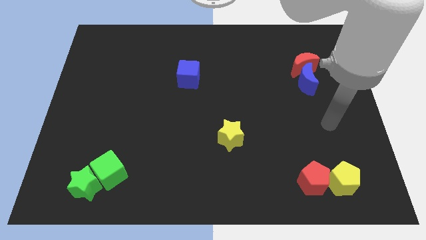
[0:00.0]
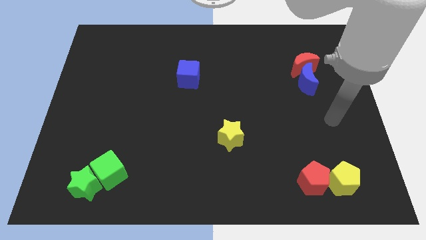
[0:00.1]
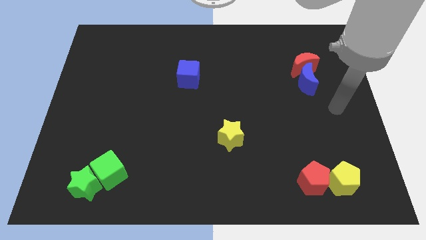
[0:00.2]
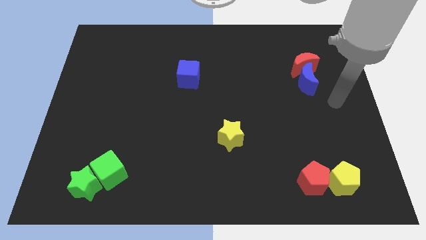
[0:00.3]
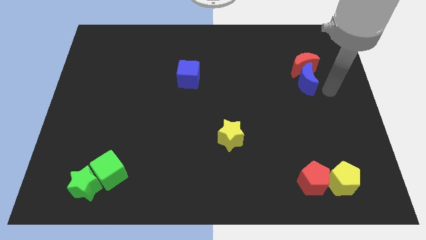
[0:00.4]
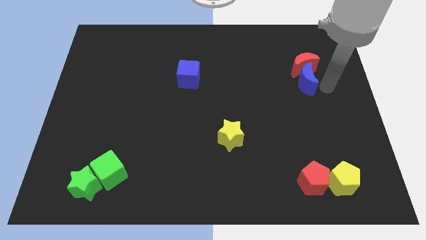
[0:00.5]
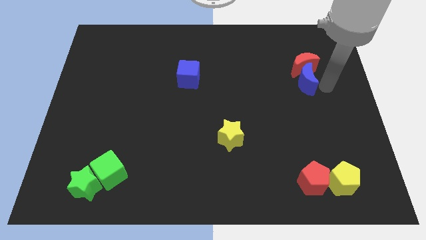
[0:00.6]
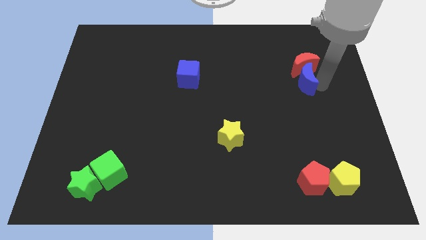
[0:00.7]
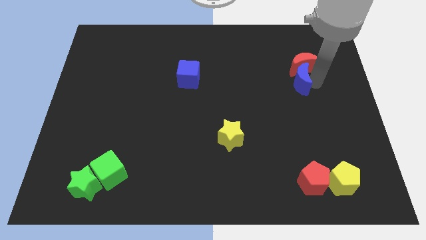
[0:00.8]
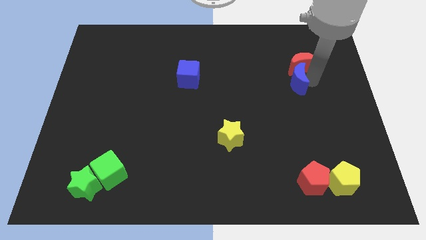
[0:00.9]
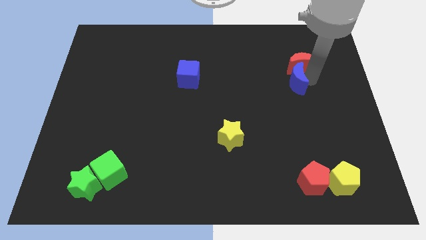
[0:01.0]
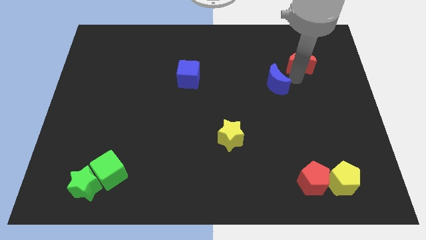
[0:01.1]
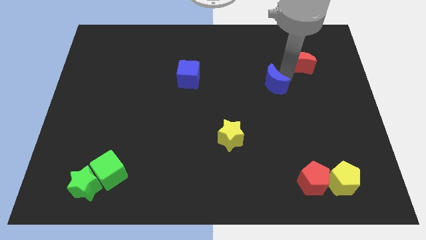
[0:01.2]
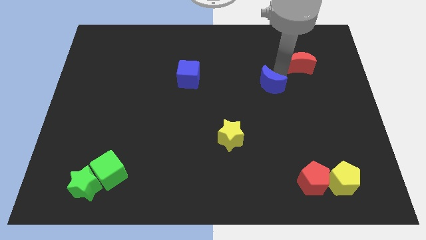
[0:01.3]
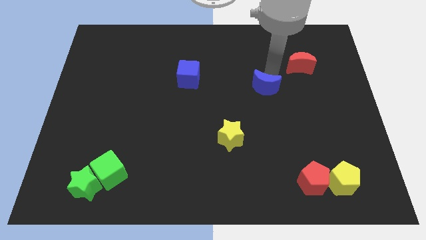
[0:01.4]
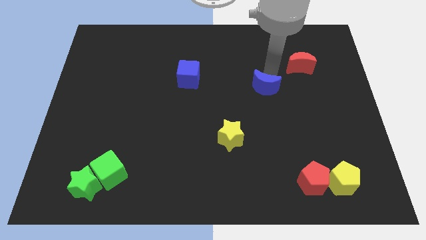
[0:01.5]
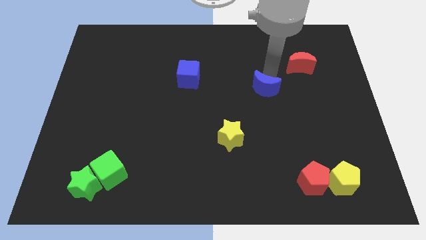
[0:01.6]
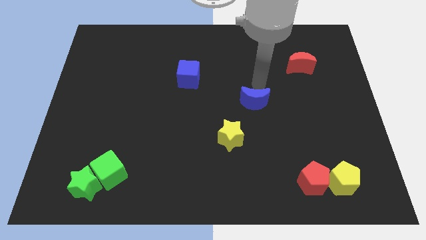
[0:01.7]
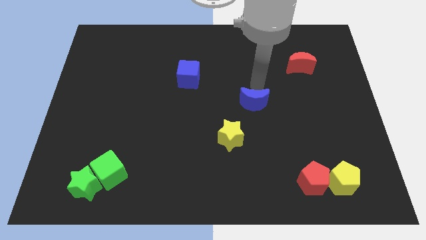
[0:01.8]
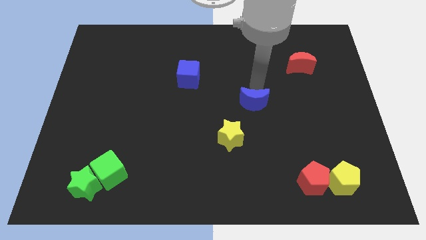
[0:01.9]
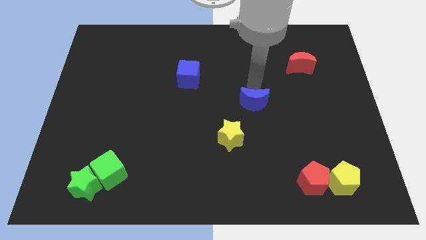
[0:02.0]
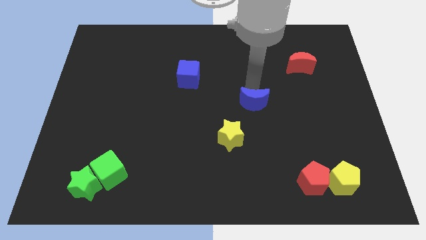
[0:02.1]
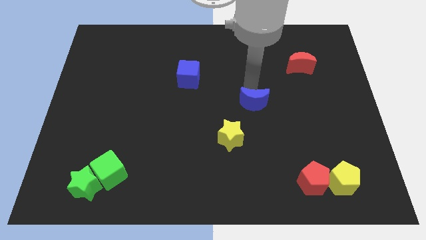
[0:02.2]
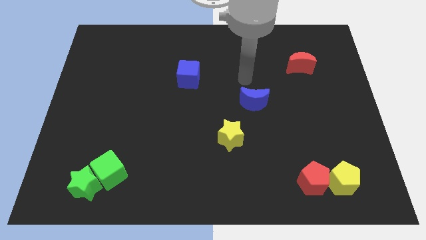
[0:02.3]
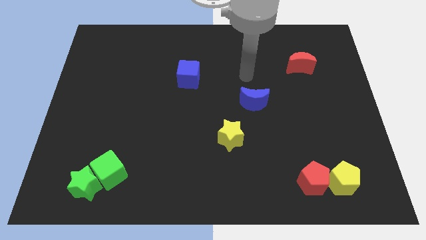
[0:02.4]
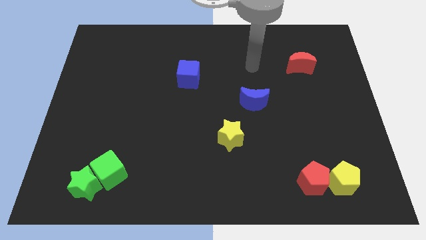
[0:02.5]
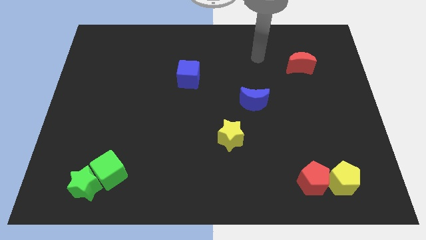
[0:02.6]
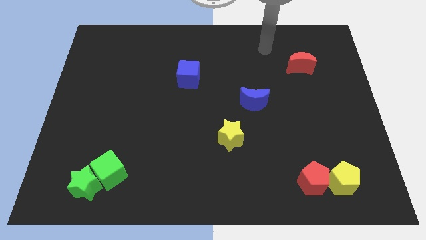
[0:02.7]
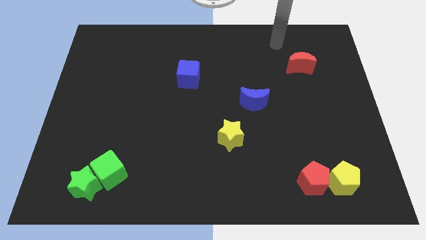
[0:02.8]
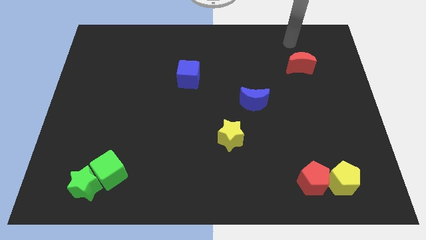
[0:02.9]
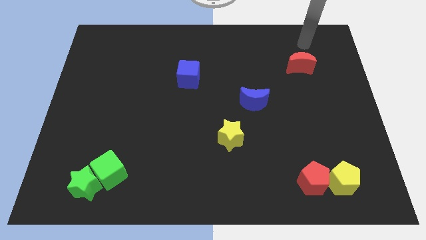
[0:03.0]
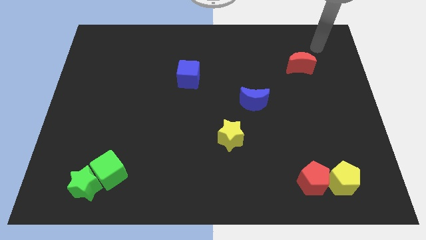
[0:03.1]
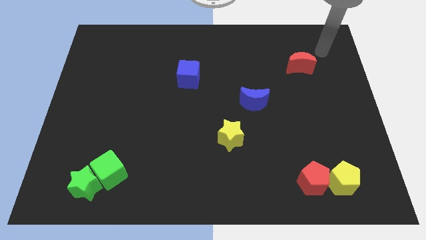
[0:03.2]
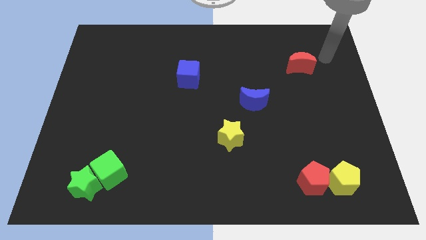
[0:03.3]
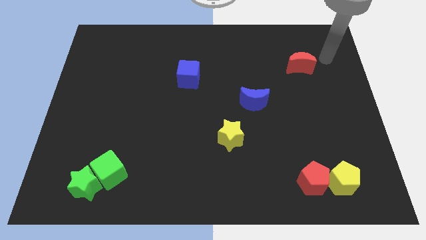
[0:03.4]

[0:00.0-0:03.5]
move the blue crescent towards the yellow star

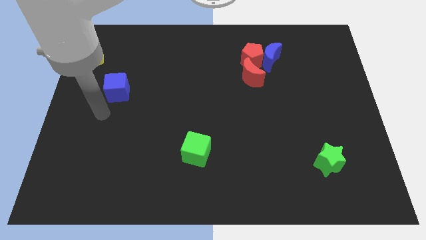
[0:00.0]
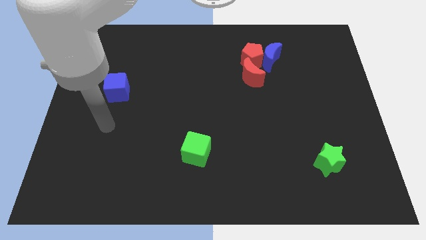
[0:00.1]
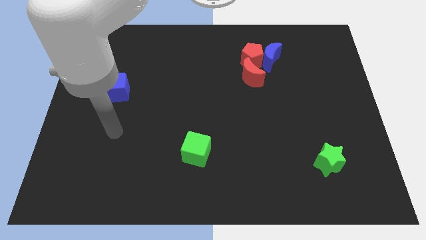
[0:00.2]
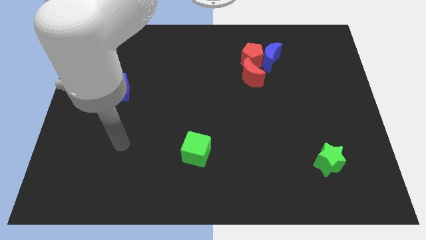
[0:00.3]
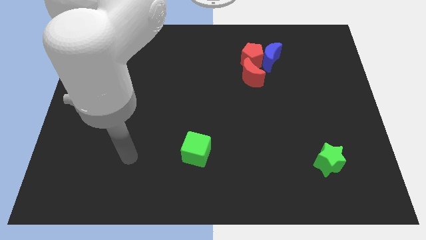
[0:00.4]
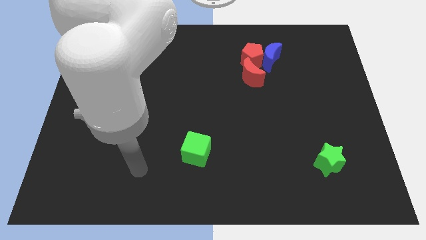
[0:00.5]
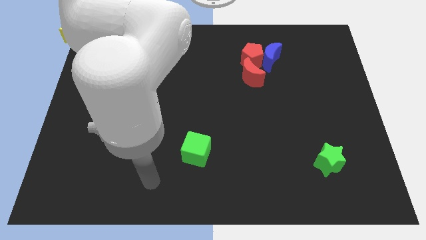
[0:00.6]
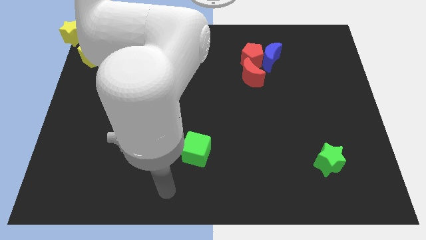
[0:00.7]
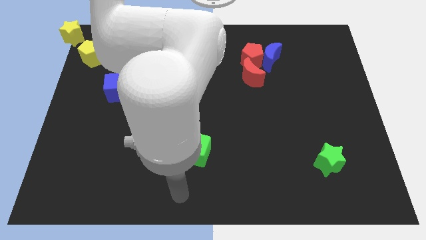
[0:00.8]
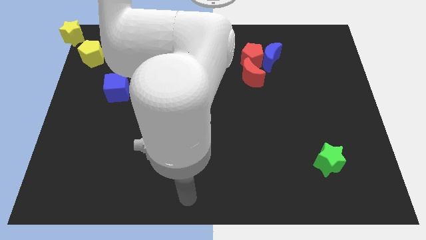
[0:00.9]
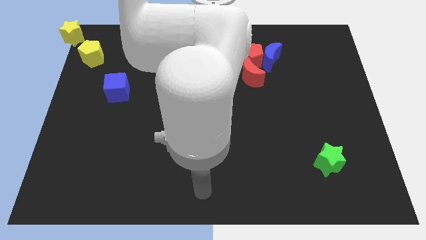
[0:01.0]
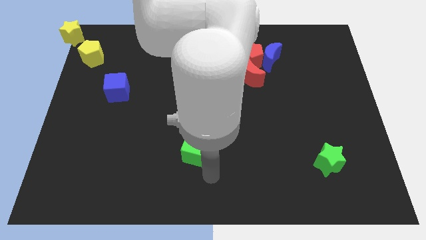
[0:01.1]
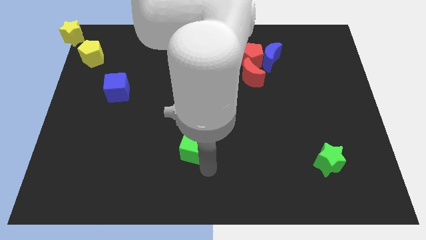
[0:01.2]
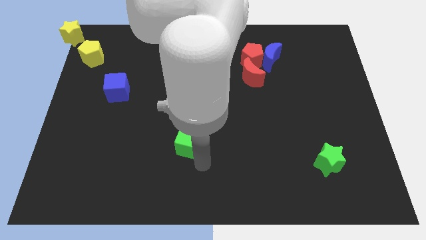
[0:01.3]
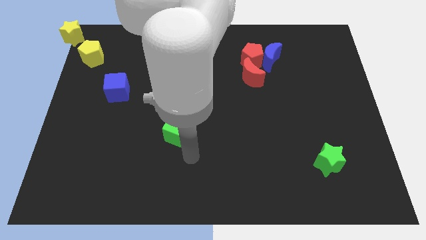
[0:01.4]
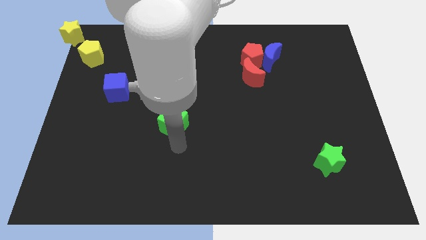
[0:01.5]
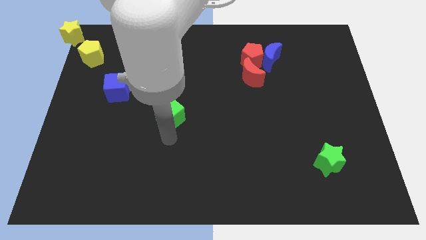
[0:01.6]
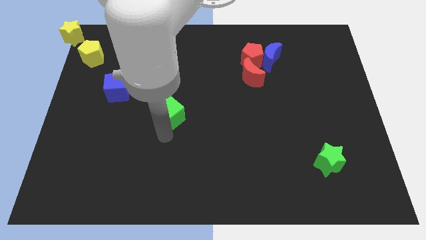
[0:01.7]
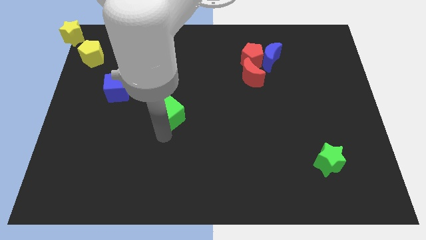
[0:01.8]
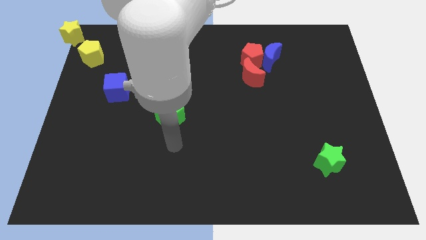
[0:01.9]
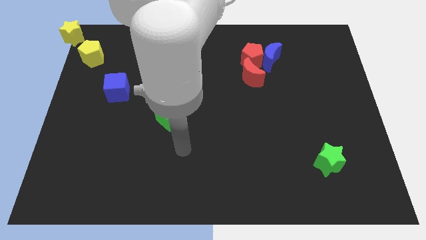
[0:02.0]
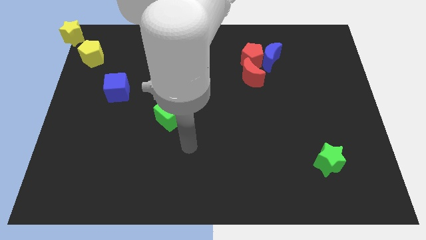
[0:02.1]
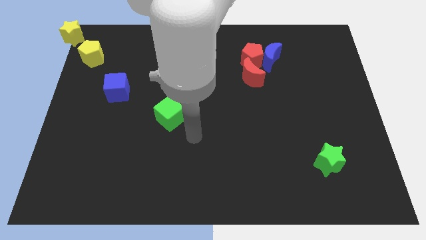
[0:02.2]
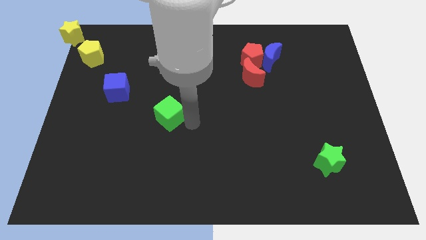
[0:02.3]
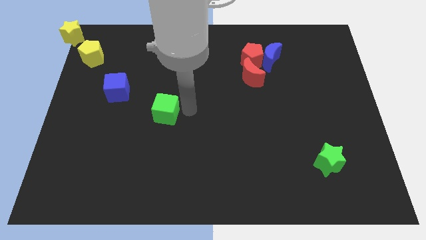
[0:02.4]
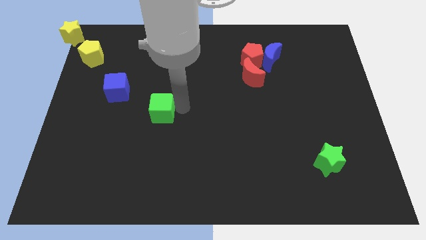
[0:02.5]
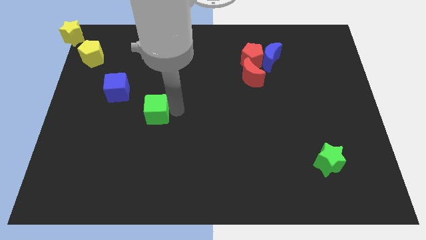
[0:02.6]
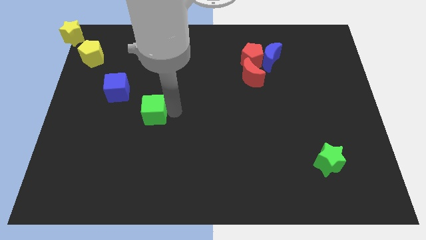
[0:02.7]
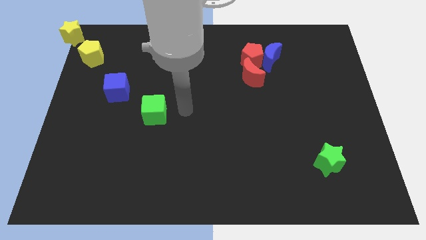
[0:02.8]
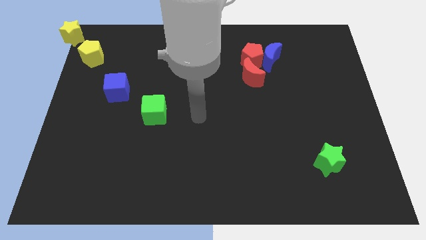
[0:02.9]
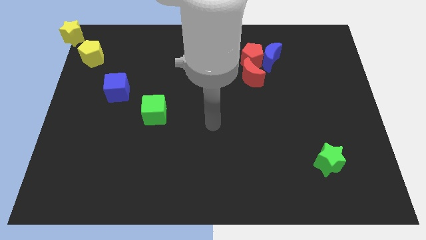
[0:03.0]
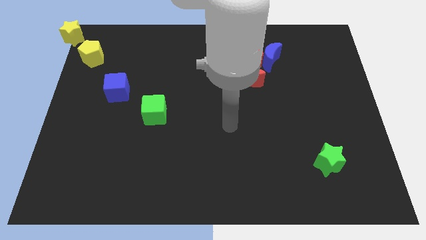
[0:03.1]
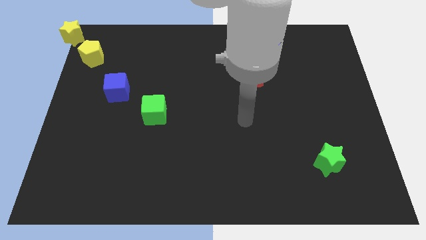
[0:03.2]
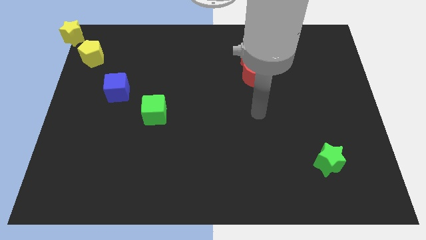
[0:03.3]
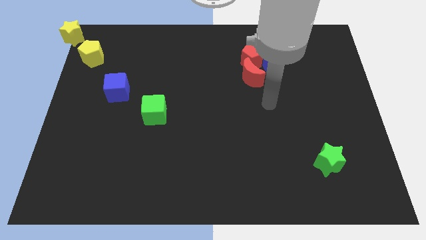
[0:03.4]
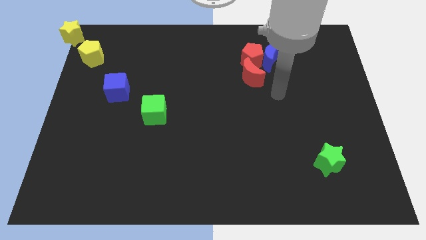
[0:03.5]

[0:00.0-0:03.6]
push the green cube slightly towards the blue cube

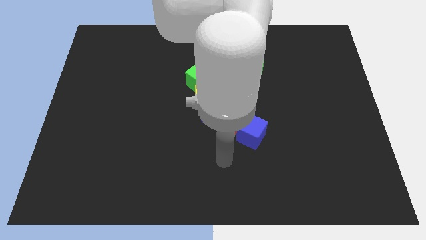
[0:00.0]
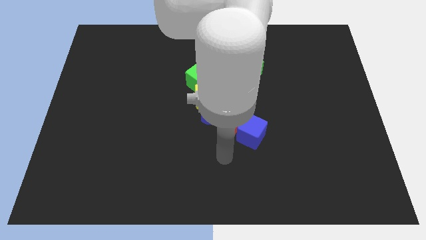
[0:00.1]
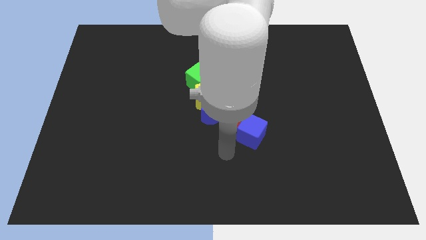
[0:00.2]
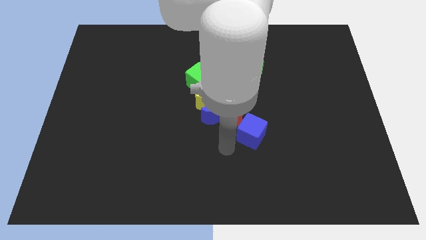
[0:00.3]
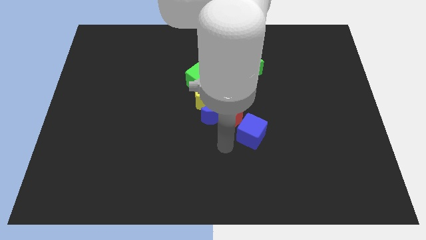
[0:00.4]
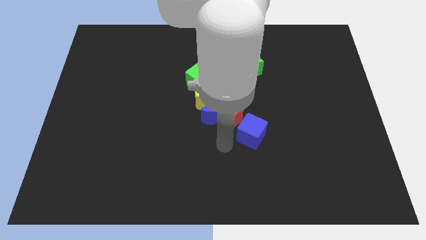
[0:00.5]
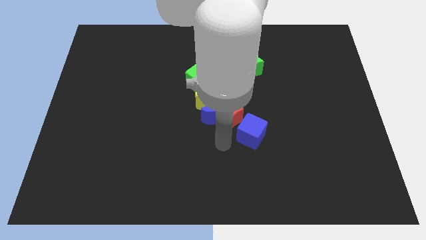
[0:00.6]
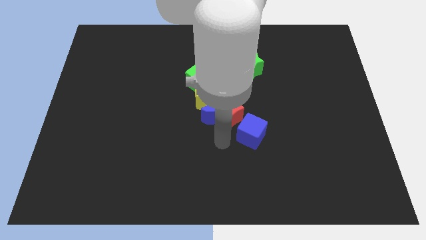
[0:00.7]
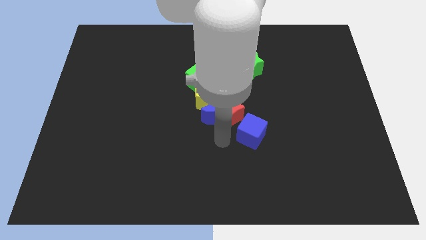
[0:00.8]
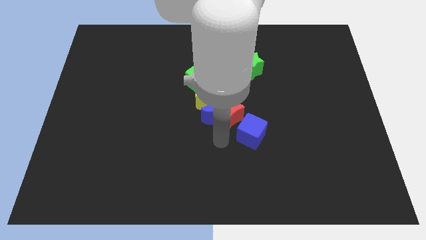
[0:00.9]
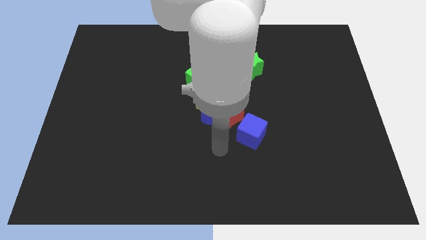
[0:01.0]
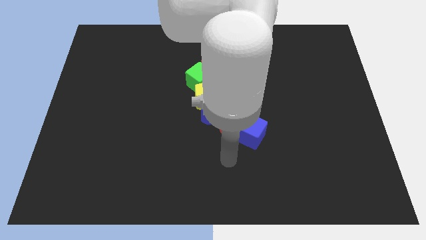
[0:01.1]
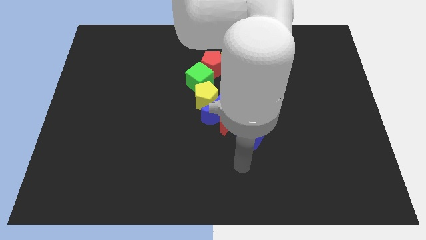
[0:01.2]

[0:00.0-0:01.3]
push the red crescent to the right side of the blue crescent

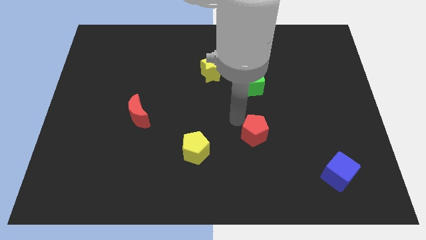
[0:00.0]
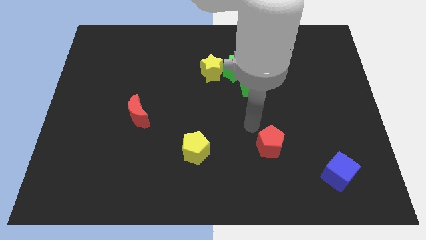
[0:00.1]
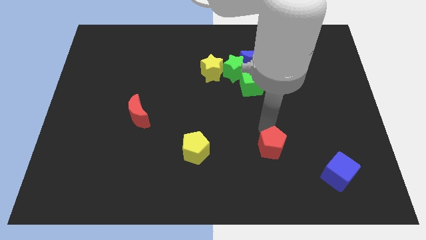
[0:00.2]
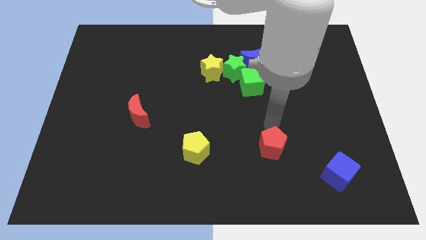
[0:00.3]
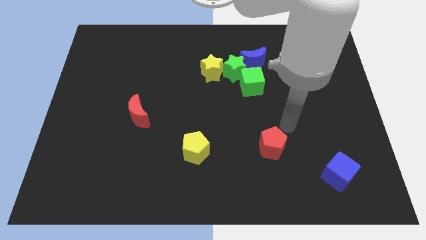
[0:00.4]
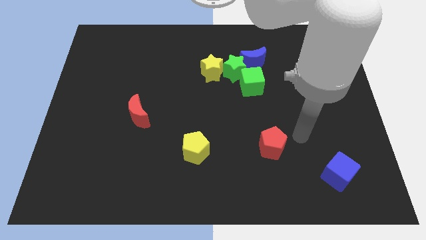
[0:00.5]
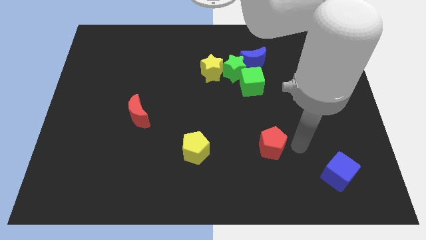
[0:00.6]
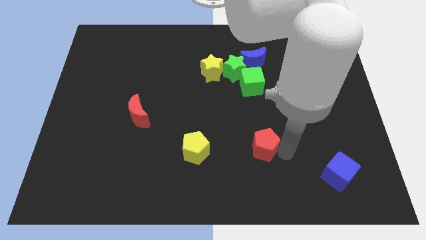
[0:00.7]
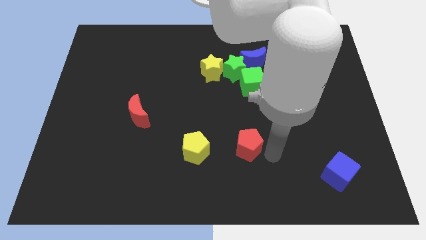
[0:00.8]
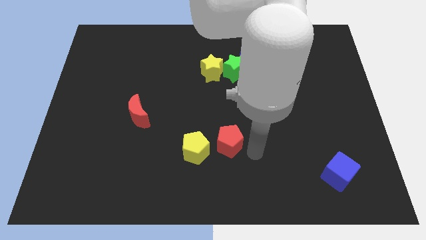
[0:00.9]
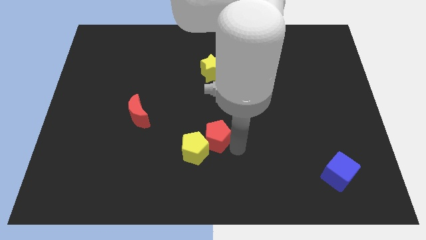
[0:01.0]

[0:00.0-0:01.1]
place red pentagon near yellow pentagon
